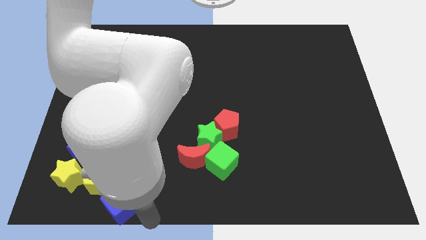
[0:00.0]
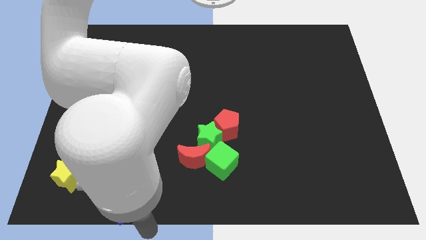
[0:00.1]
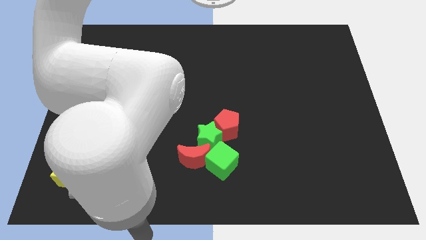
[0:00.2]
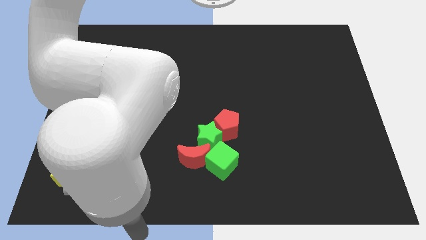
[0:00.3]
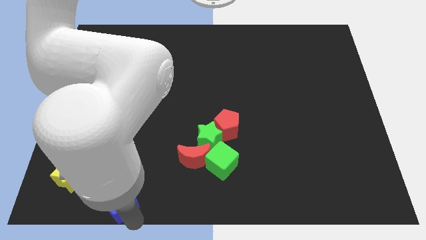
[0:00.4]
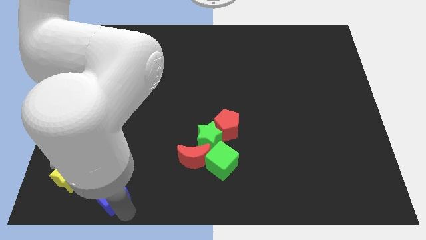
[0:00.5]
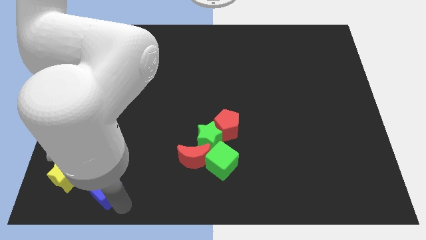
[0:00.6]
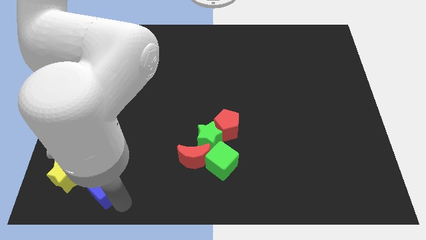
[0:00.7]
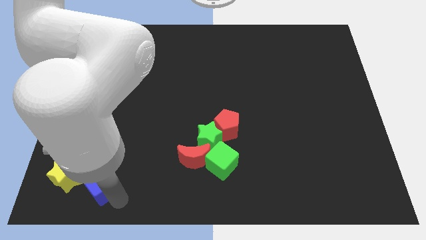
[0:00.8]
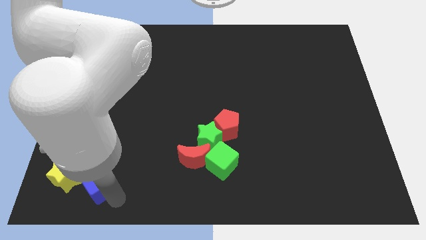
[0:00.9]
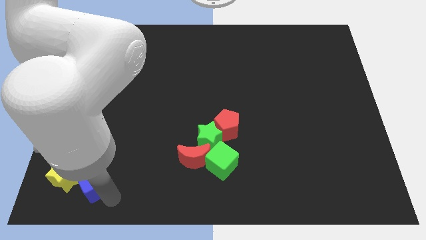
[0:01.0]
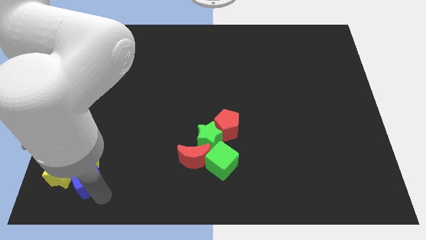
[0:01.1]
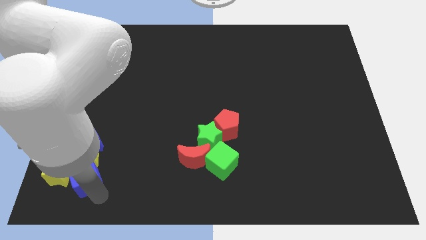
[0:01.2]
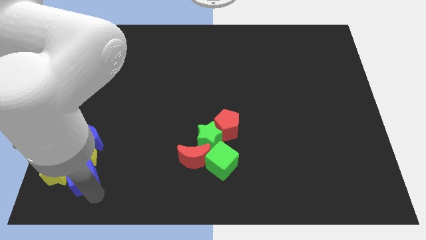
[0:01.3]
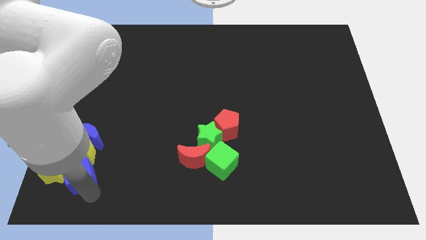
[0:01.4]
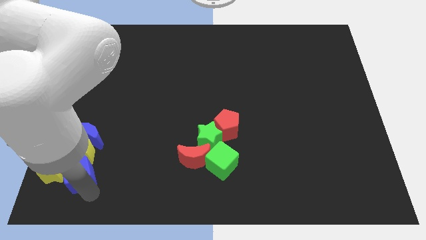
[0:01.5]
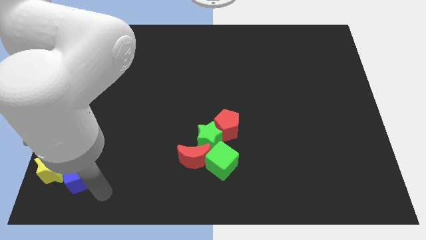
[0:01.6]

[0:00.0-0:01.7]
move the blue cube into the yellow pentagon

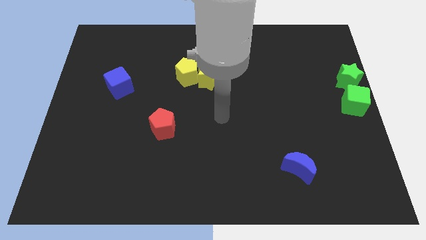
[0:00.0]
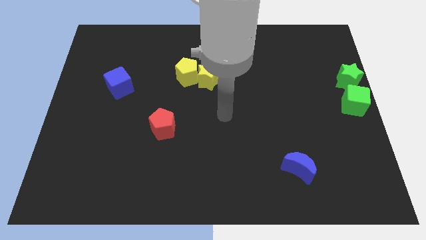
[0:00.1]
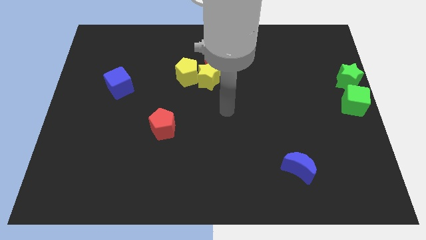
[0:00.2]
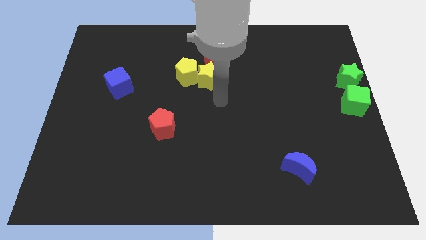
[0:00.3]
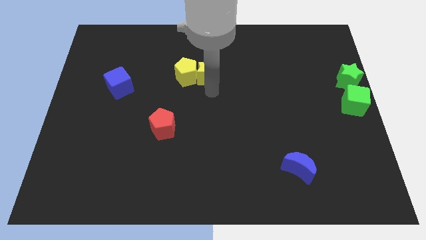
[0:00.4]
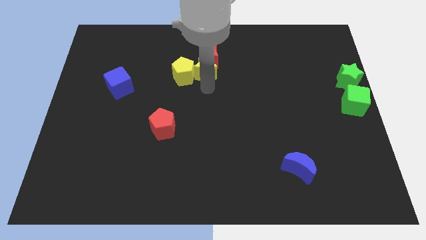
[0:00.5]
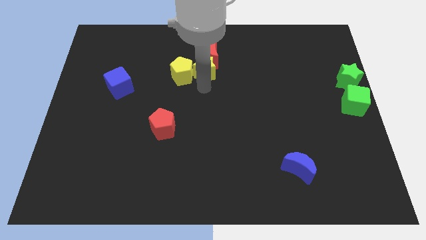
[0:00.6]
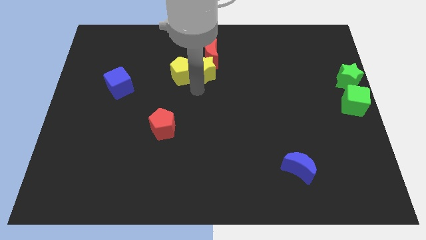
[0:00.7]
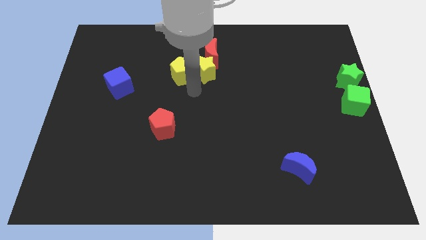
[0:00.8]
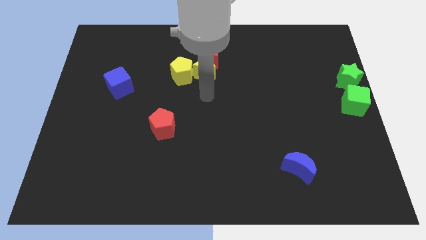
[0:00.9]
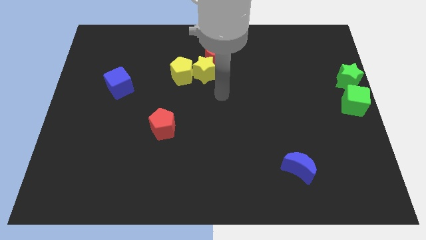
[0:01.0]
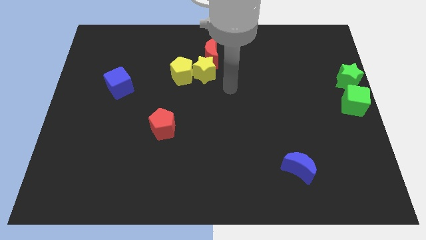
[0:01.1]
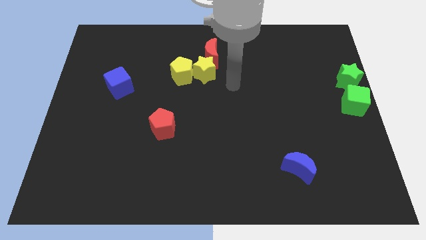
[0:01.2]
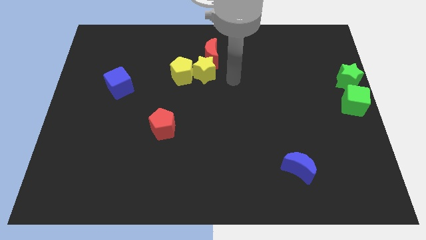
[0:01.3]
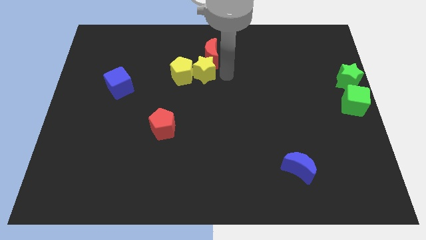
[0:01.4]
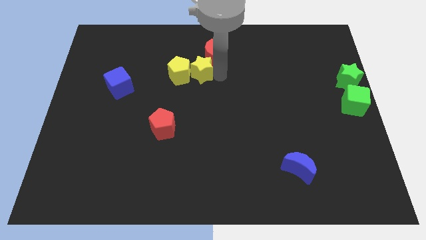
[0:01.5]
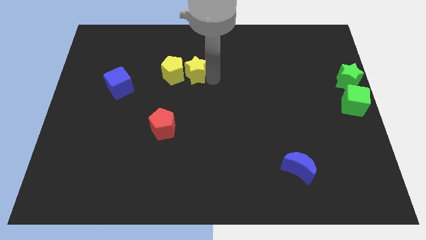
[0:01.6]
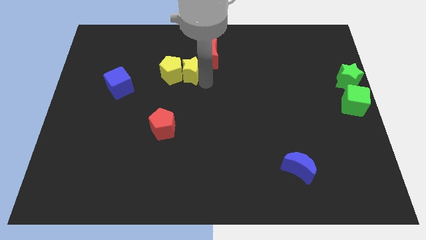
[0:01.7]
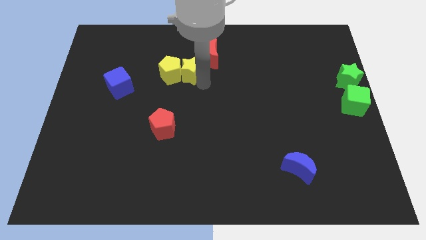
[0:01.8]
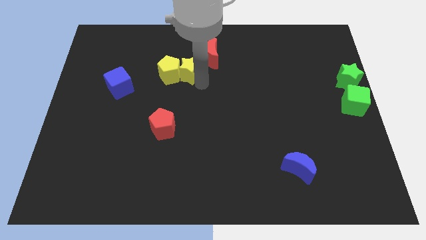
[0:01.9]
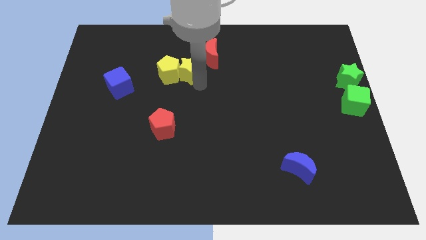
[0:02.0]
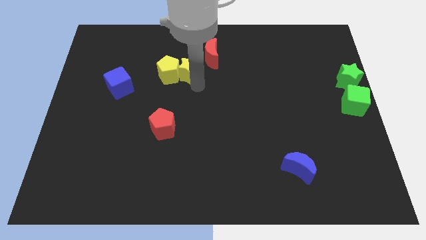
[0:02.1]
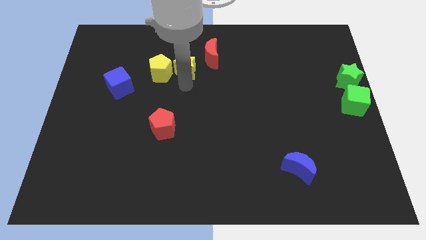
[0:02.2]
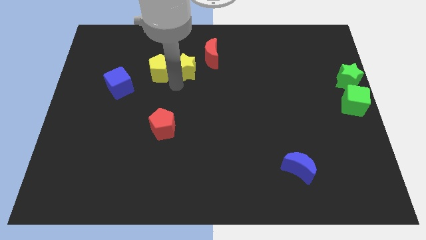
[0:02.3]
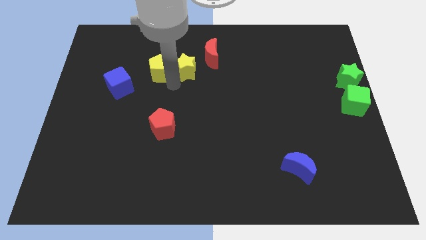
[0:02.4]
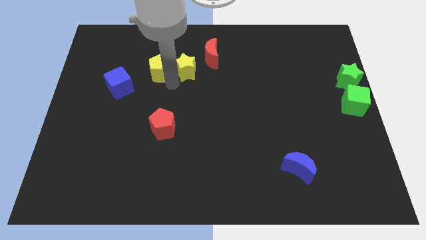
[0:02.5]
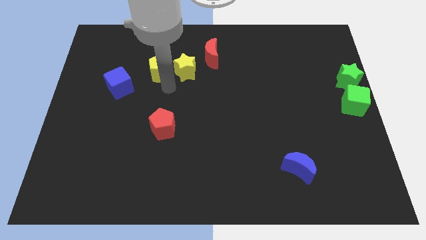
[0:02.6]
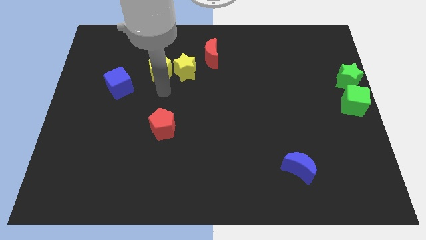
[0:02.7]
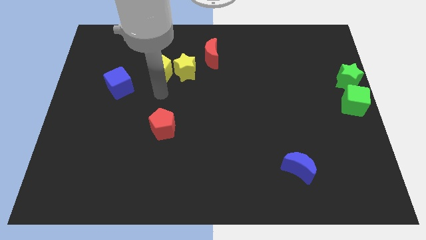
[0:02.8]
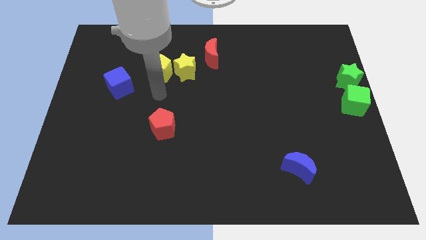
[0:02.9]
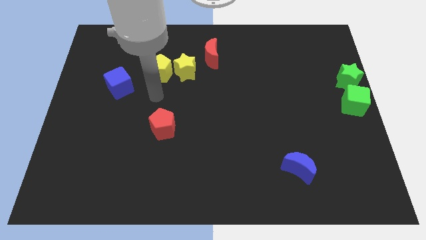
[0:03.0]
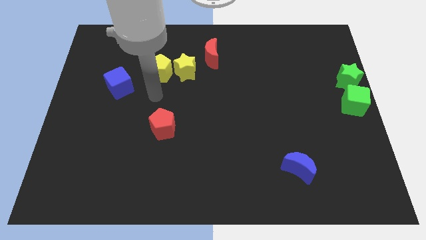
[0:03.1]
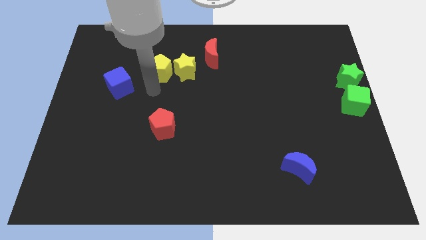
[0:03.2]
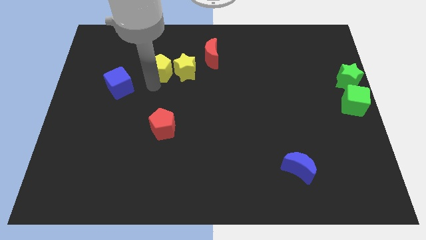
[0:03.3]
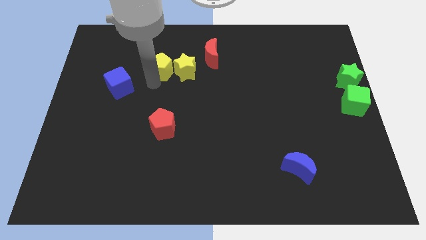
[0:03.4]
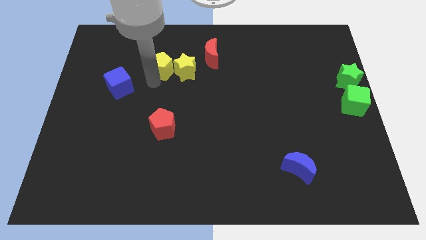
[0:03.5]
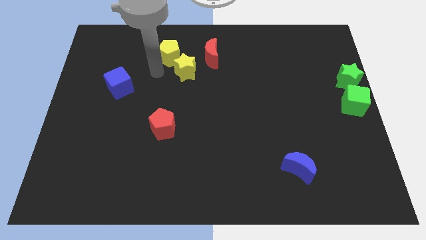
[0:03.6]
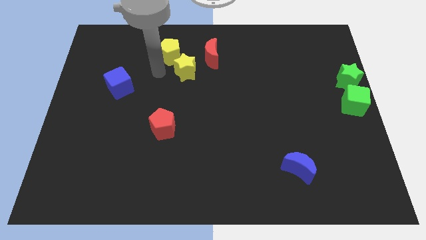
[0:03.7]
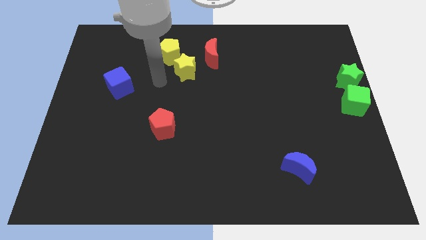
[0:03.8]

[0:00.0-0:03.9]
move the yellow blocks diagonally in between the red crescent and blue cube

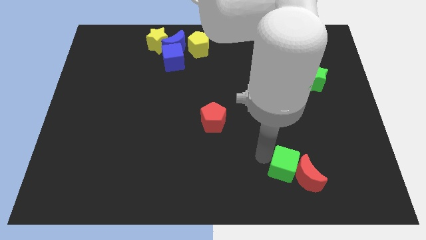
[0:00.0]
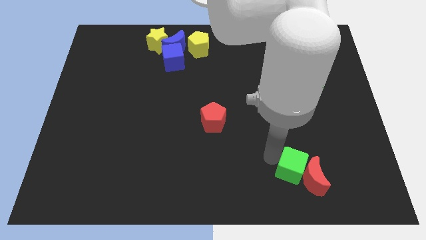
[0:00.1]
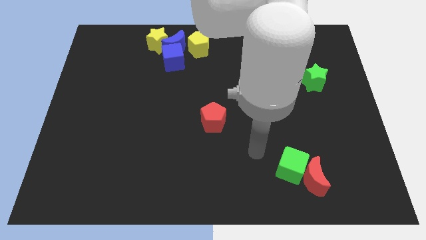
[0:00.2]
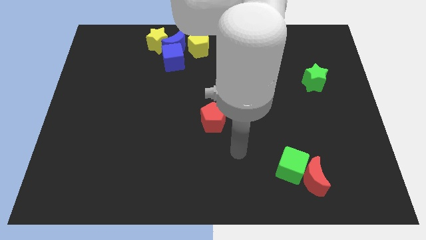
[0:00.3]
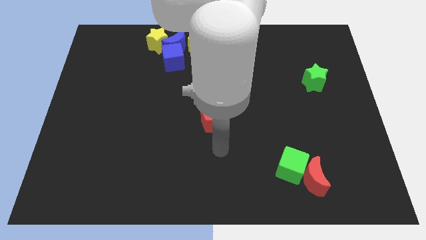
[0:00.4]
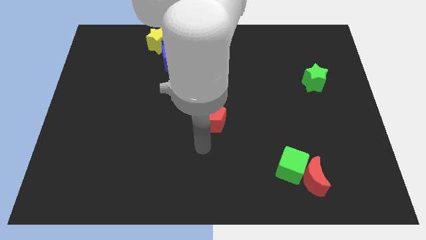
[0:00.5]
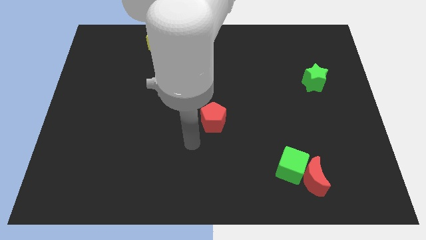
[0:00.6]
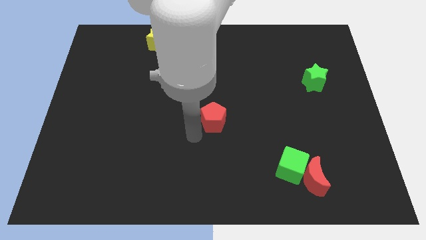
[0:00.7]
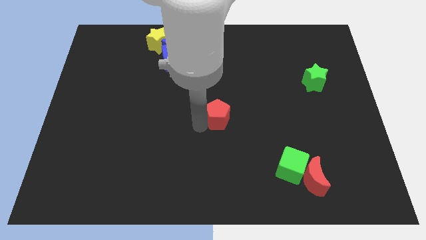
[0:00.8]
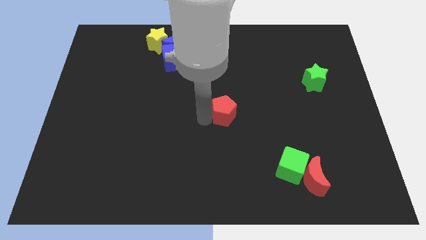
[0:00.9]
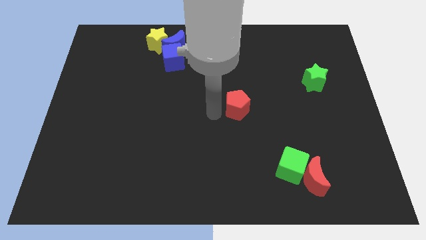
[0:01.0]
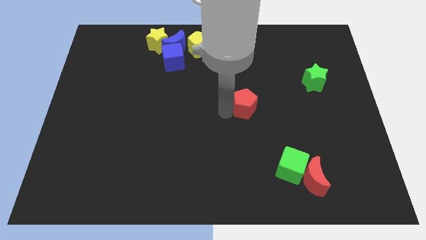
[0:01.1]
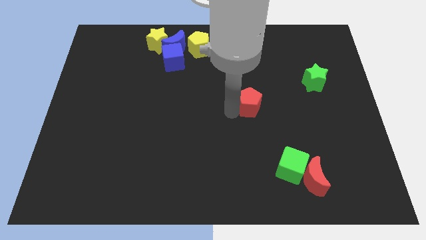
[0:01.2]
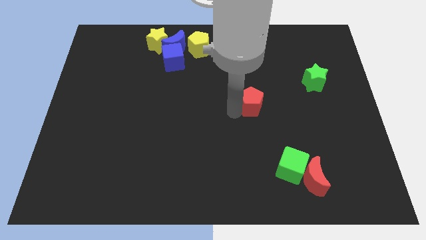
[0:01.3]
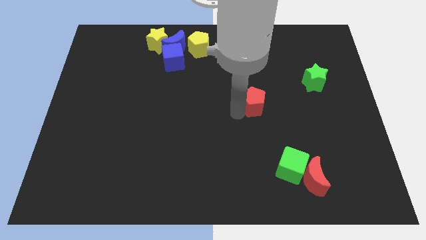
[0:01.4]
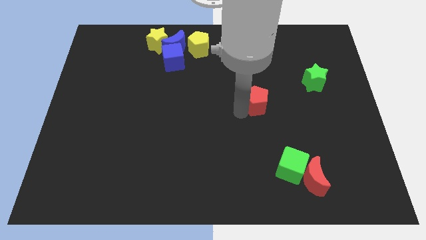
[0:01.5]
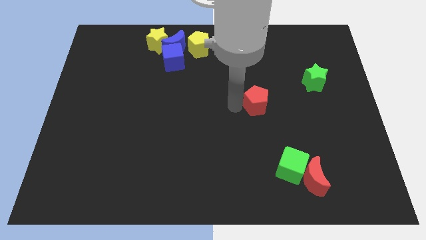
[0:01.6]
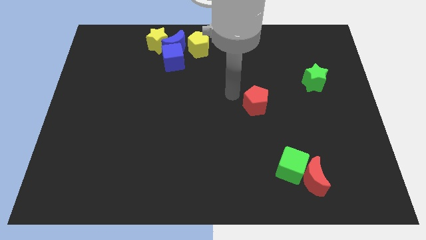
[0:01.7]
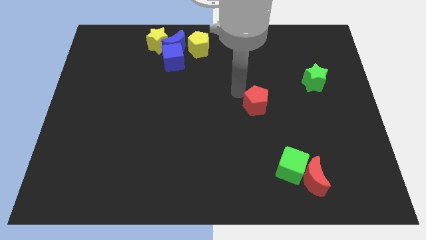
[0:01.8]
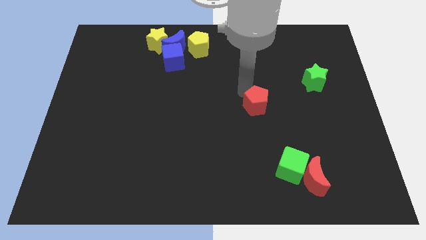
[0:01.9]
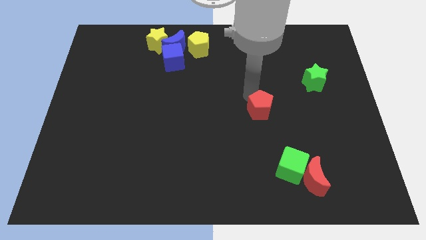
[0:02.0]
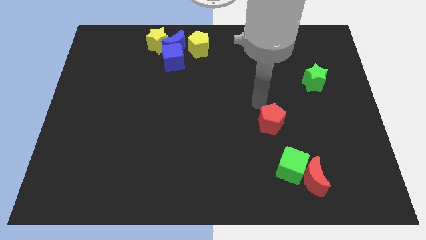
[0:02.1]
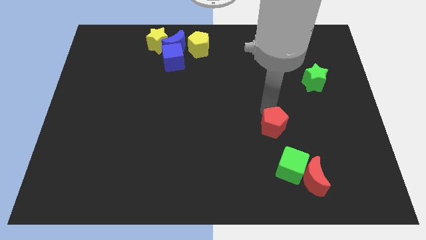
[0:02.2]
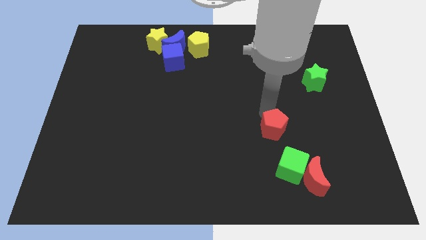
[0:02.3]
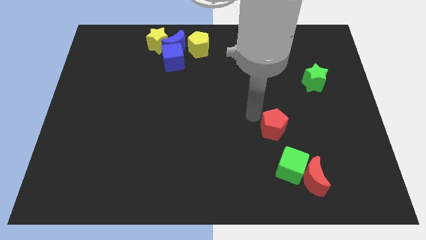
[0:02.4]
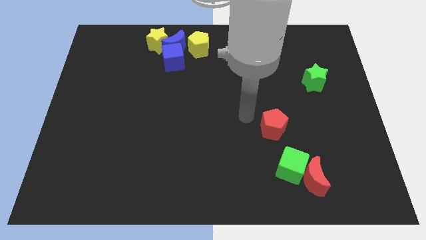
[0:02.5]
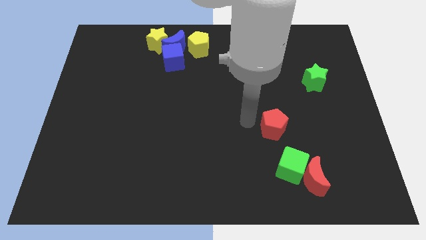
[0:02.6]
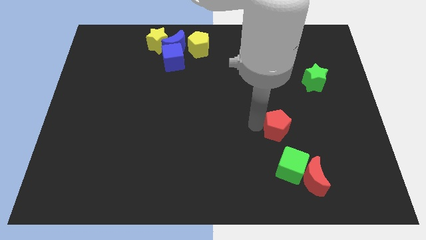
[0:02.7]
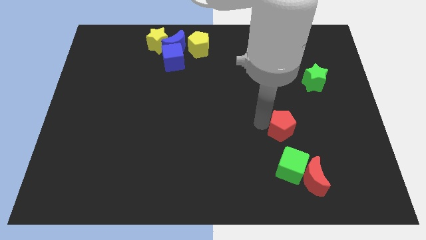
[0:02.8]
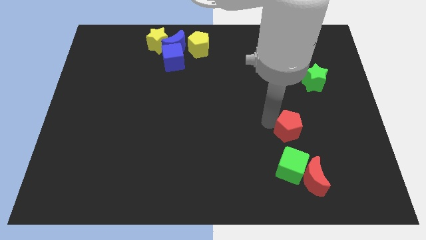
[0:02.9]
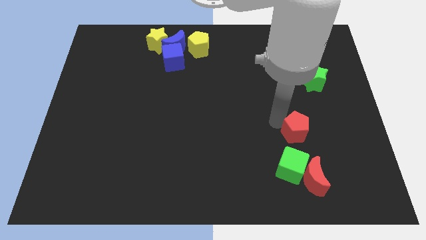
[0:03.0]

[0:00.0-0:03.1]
place red pentagon at the top of the green cube

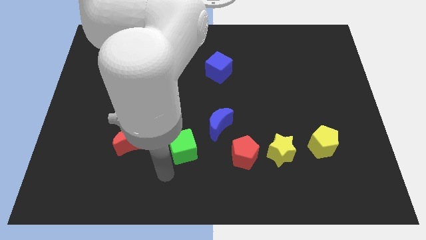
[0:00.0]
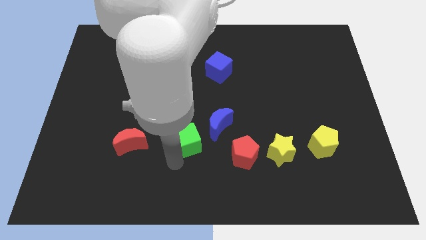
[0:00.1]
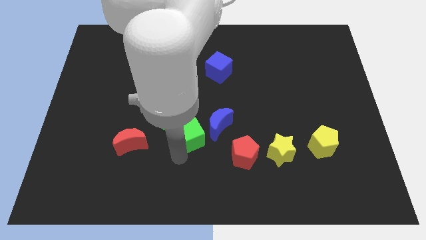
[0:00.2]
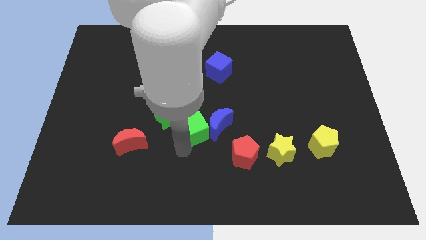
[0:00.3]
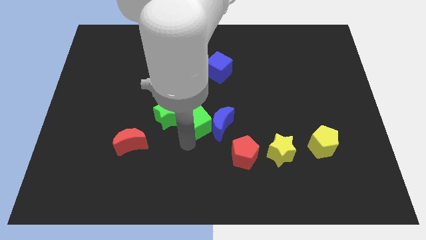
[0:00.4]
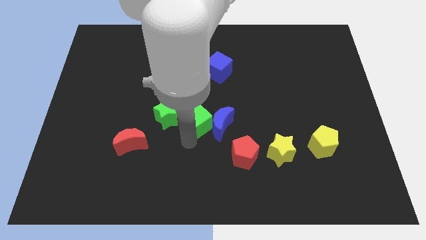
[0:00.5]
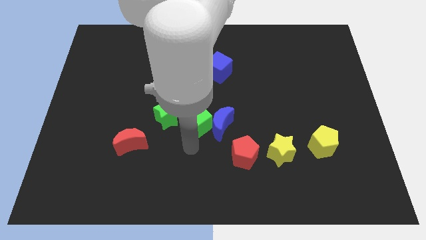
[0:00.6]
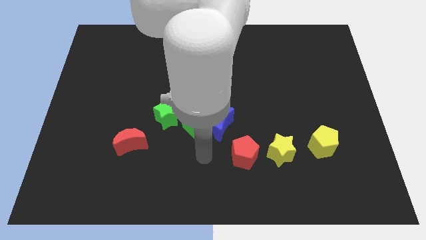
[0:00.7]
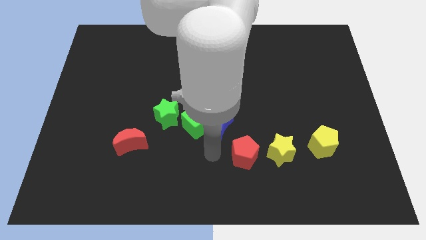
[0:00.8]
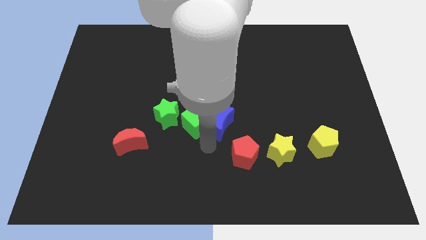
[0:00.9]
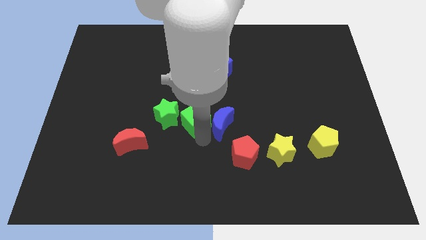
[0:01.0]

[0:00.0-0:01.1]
place green cube to the right of green star
